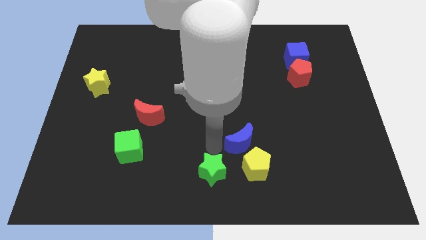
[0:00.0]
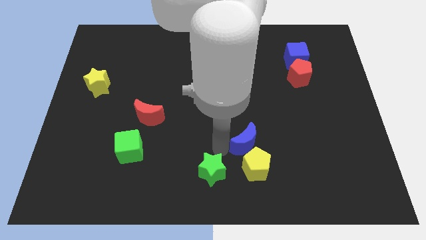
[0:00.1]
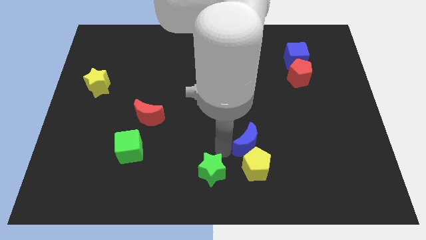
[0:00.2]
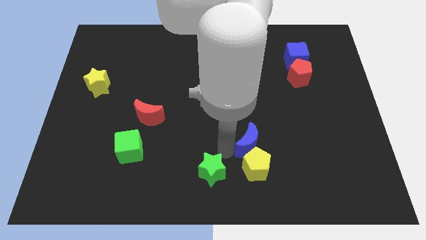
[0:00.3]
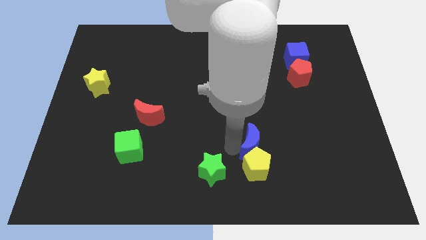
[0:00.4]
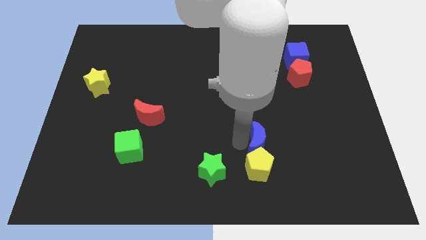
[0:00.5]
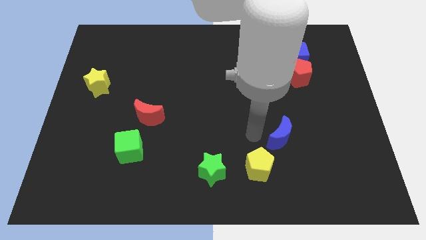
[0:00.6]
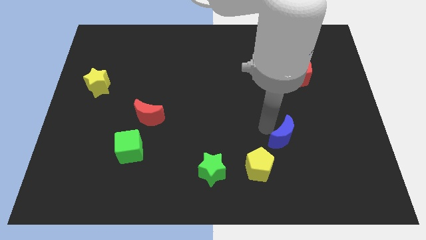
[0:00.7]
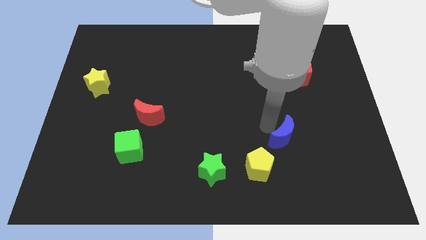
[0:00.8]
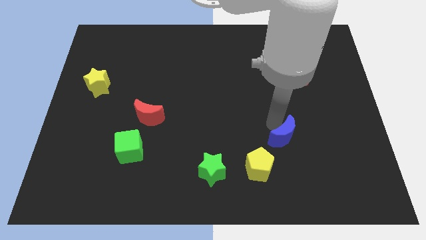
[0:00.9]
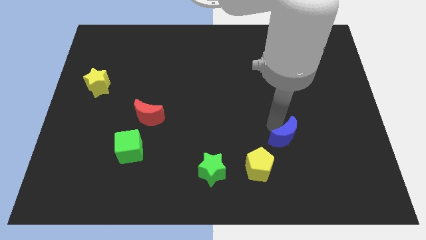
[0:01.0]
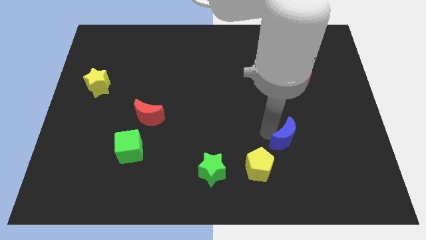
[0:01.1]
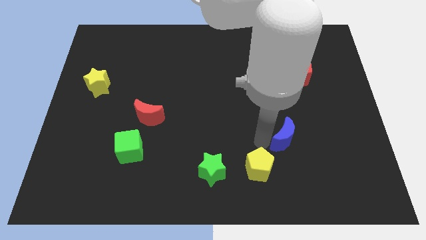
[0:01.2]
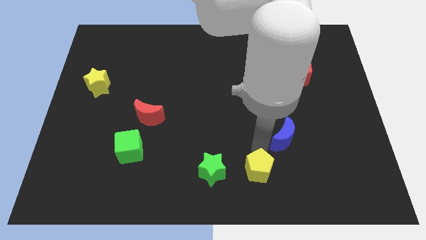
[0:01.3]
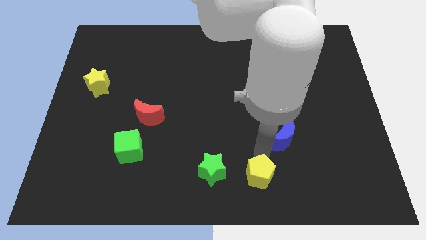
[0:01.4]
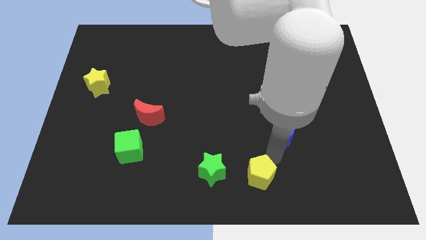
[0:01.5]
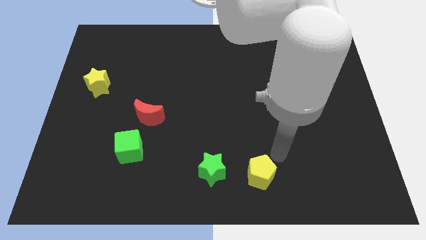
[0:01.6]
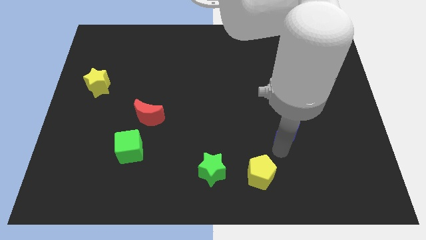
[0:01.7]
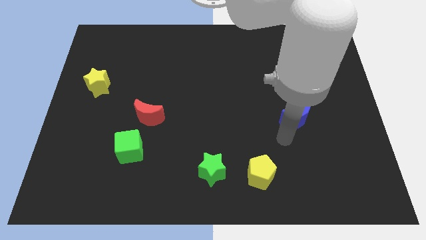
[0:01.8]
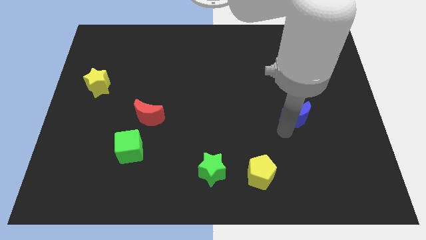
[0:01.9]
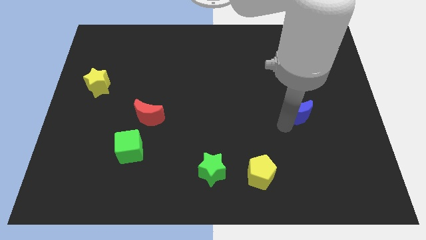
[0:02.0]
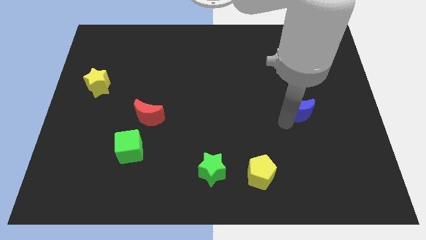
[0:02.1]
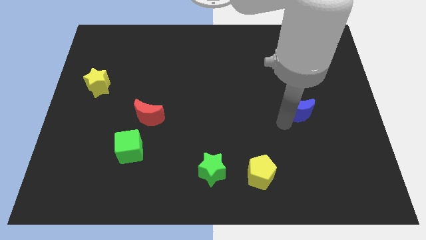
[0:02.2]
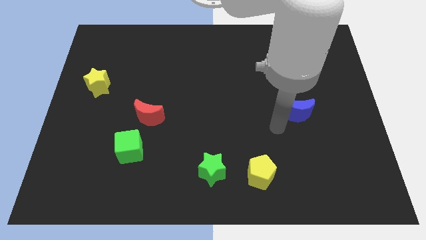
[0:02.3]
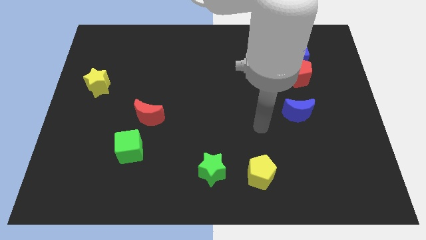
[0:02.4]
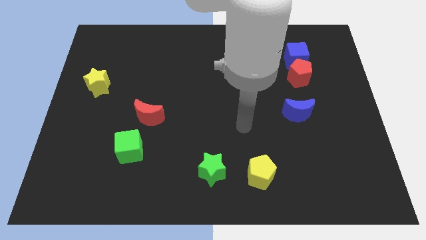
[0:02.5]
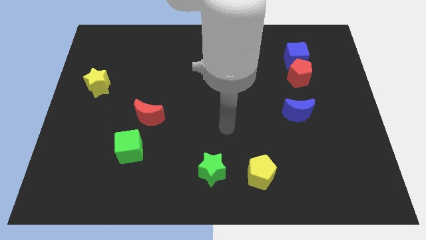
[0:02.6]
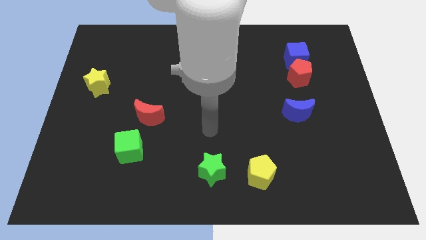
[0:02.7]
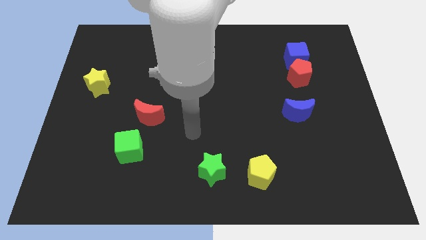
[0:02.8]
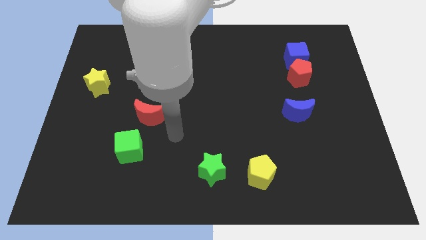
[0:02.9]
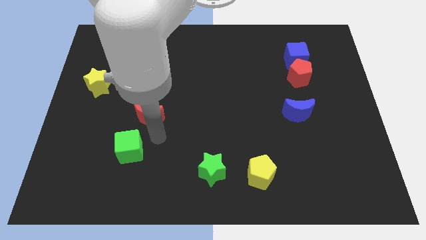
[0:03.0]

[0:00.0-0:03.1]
push the blue crescent below the red pentagon

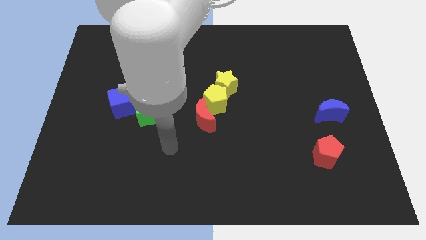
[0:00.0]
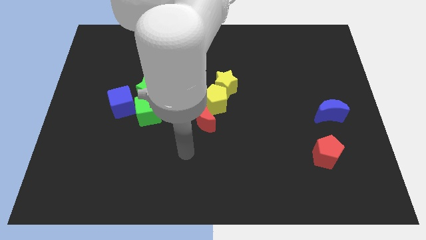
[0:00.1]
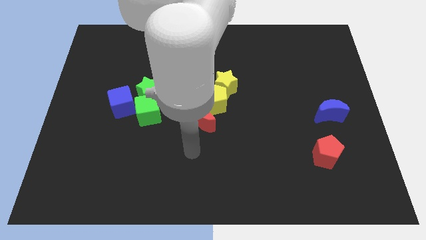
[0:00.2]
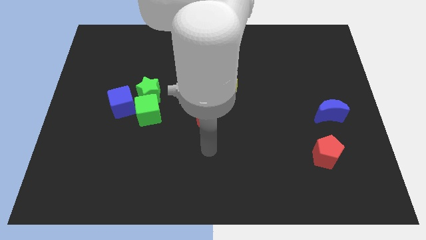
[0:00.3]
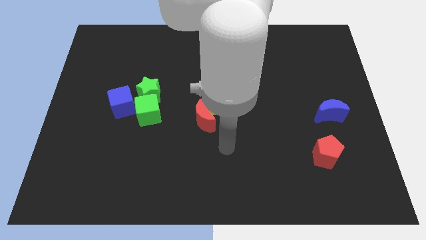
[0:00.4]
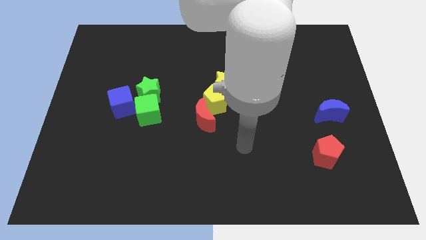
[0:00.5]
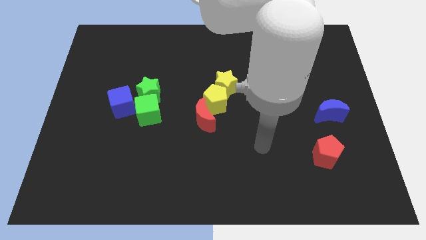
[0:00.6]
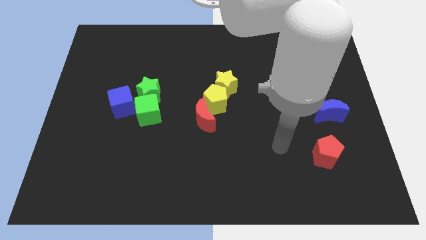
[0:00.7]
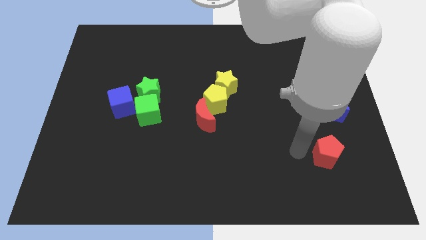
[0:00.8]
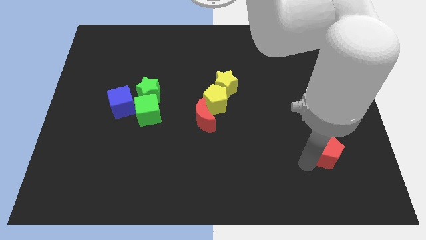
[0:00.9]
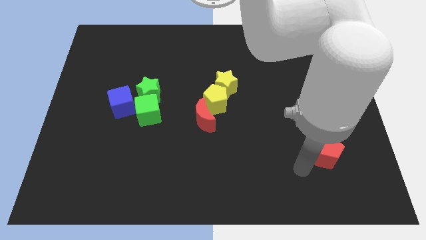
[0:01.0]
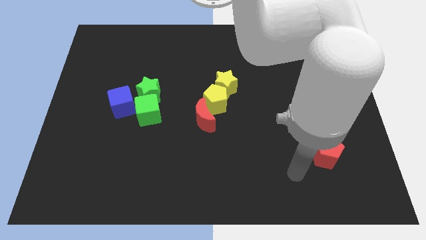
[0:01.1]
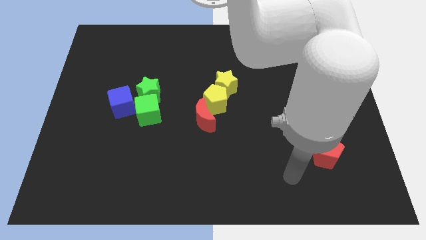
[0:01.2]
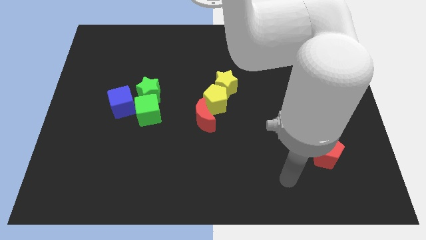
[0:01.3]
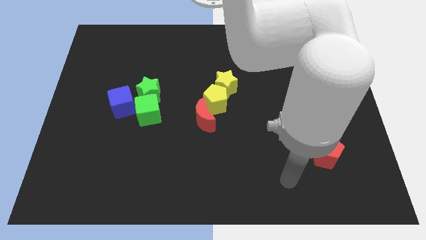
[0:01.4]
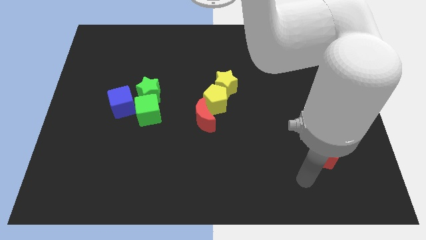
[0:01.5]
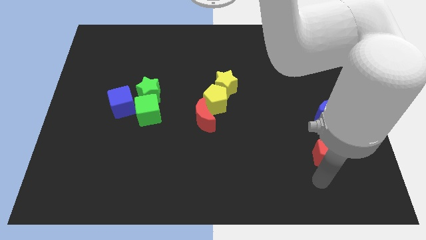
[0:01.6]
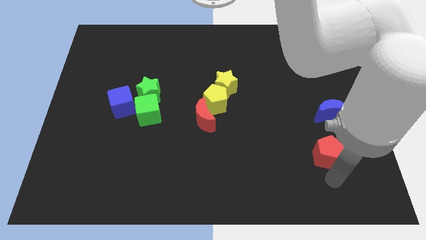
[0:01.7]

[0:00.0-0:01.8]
move your arm to the bottom of the red pentagon

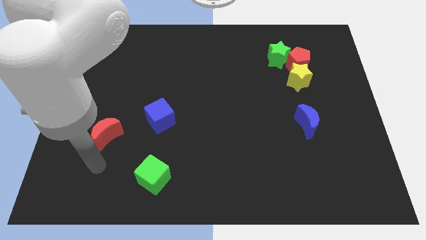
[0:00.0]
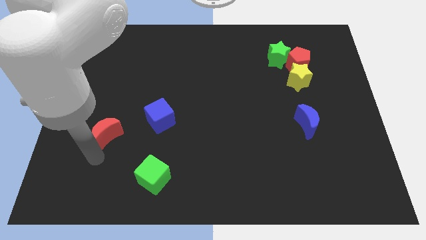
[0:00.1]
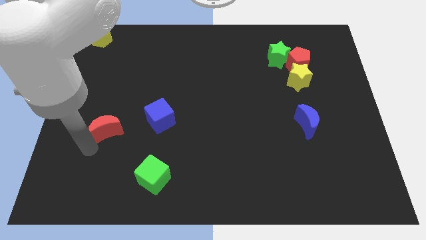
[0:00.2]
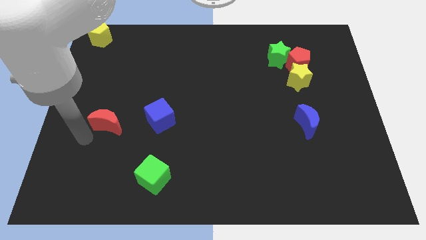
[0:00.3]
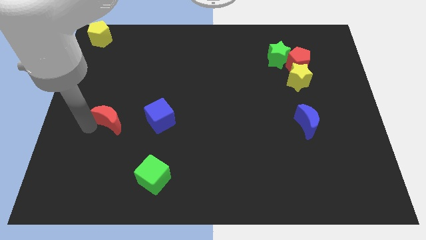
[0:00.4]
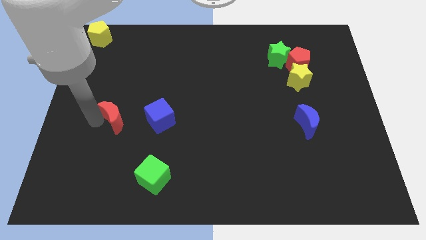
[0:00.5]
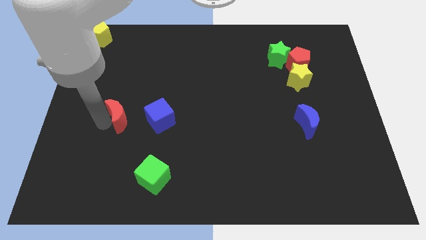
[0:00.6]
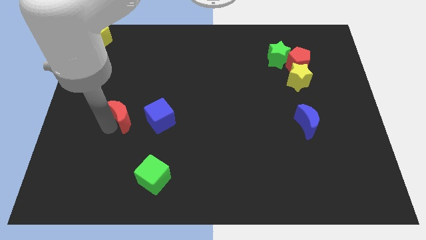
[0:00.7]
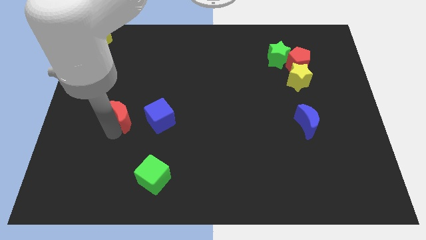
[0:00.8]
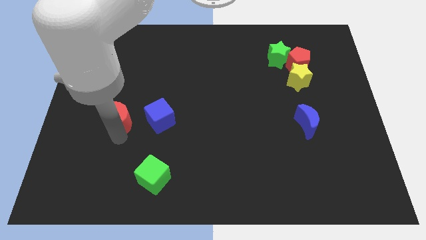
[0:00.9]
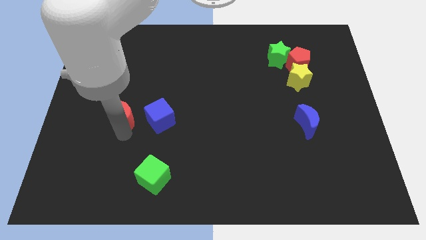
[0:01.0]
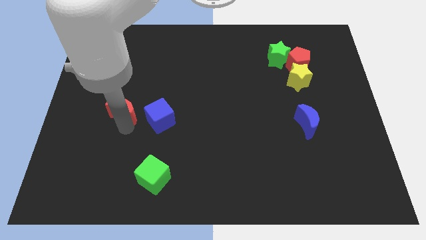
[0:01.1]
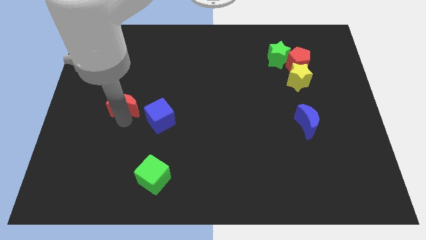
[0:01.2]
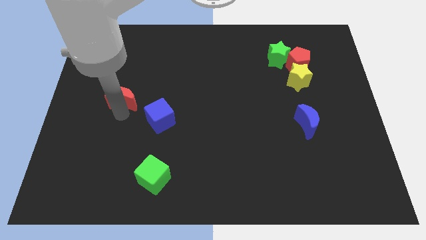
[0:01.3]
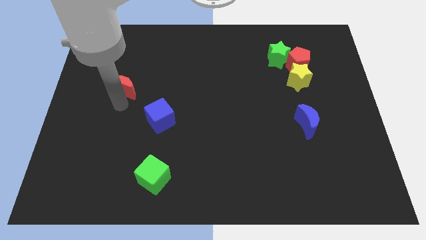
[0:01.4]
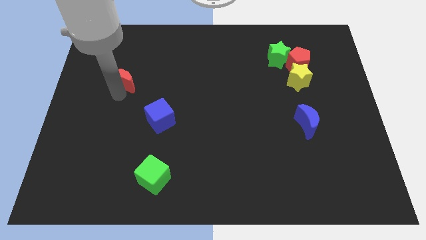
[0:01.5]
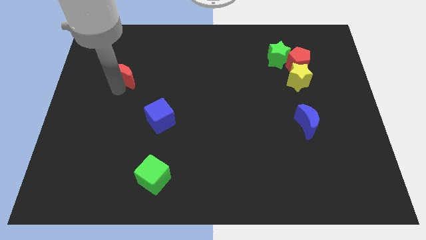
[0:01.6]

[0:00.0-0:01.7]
put the red crescent diagonally in between the blue cube and yellow pentagon

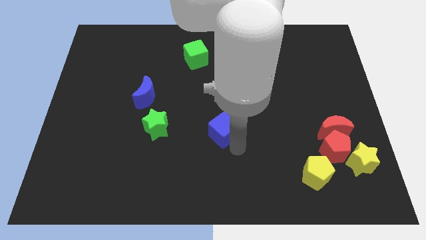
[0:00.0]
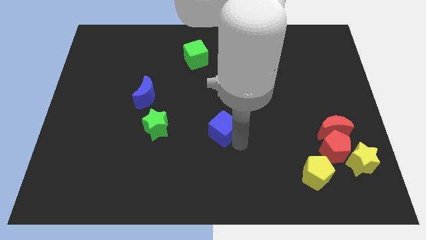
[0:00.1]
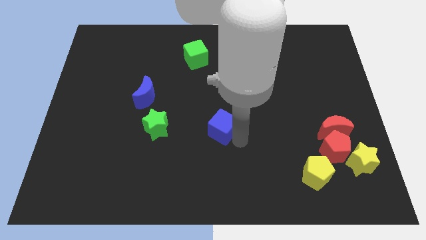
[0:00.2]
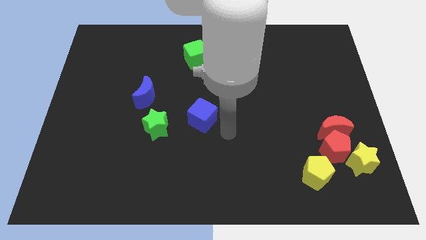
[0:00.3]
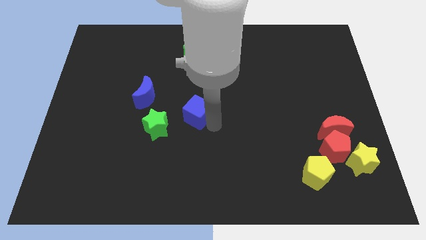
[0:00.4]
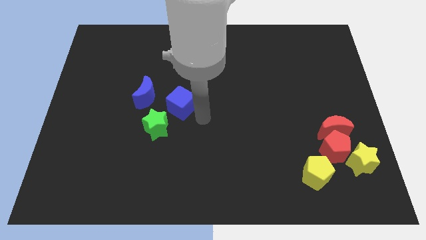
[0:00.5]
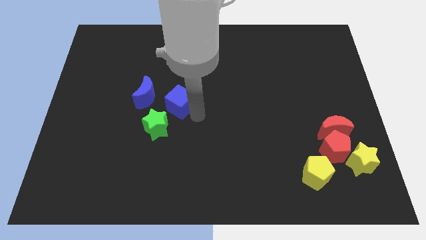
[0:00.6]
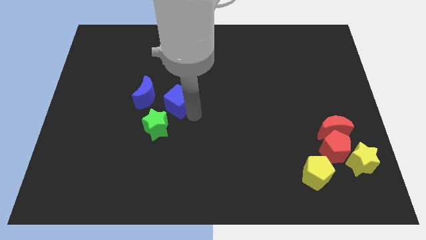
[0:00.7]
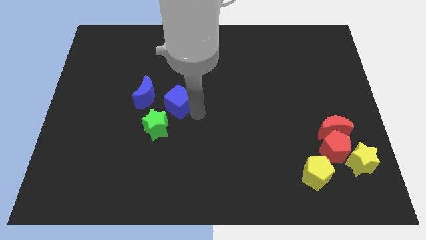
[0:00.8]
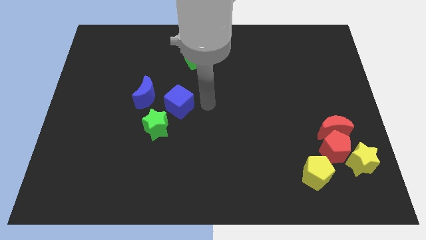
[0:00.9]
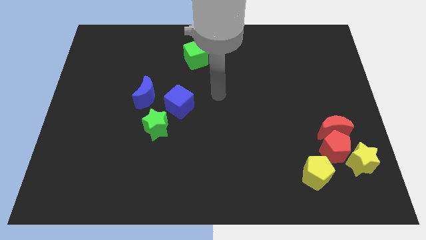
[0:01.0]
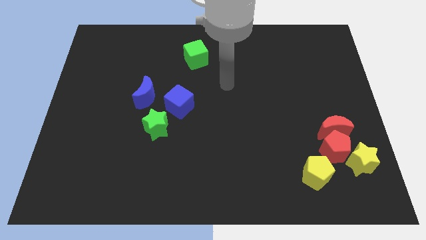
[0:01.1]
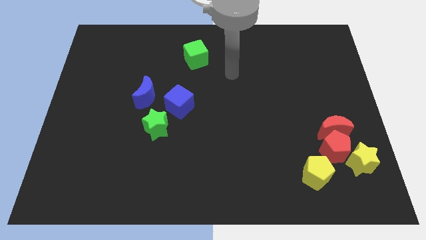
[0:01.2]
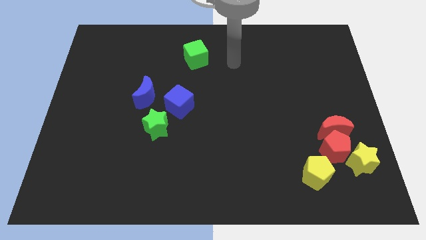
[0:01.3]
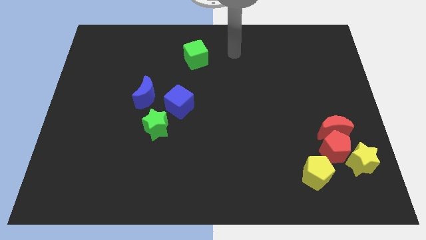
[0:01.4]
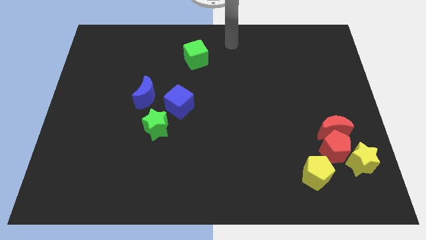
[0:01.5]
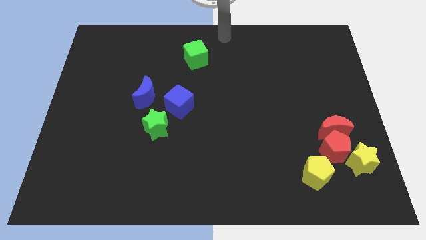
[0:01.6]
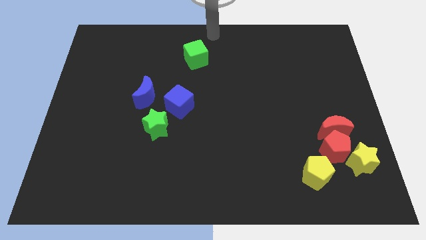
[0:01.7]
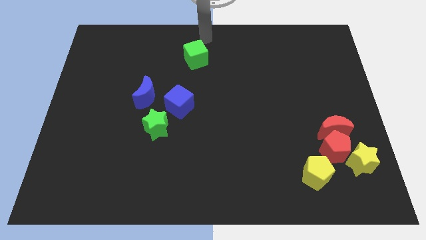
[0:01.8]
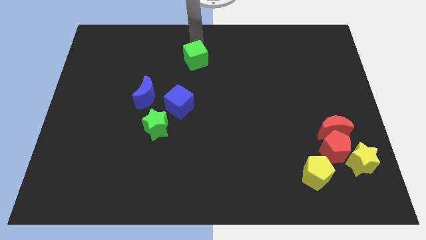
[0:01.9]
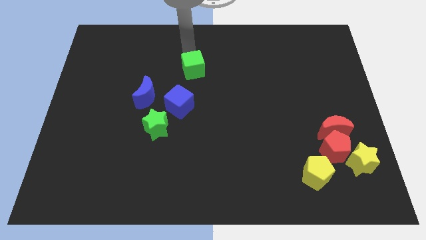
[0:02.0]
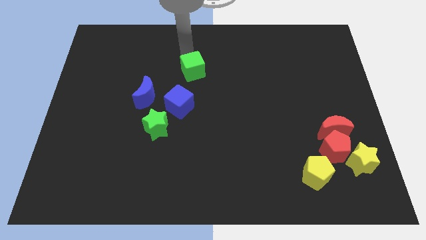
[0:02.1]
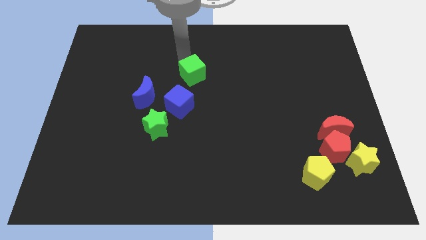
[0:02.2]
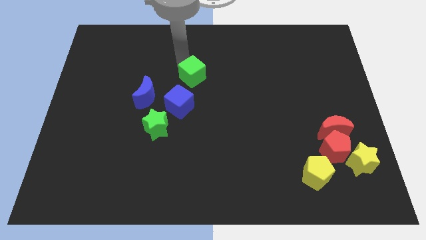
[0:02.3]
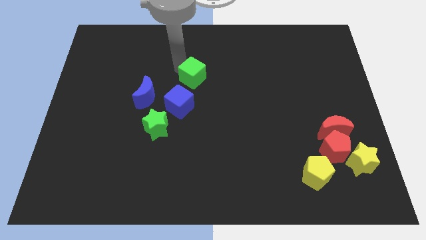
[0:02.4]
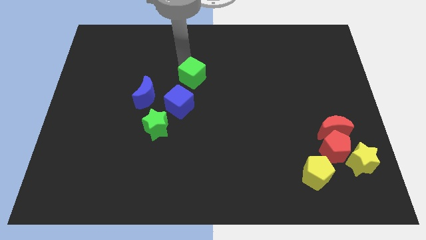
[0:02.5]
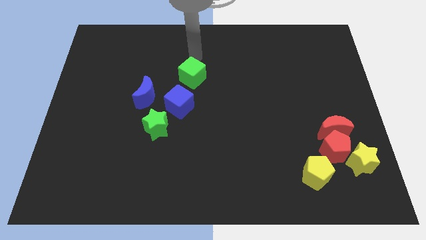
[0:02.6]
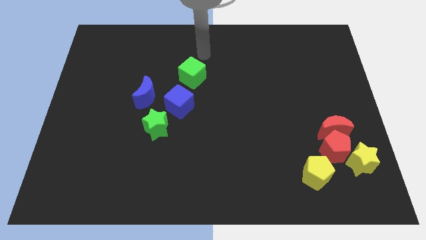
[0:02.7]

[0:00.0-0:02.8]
place the blue cube to the right of the blue crescent along with the green cube
